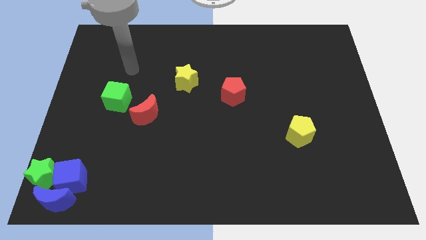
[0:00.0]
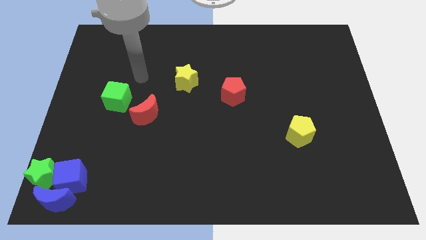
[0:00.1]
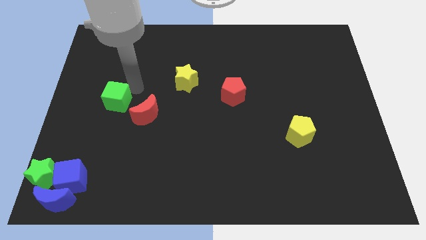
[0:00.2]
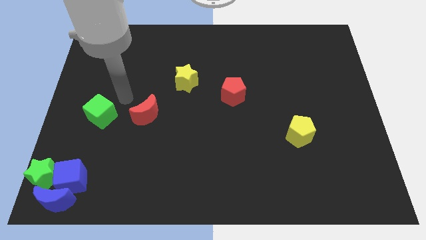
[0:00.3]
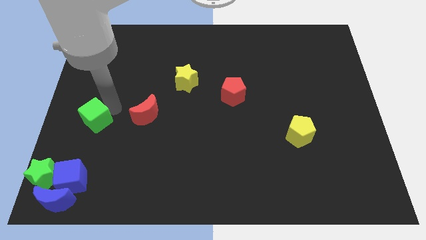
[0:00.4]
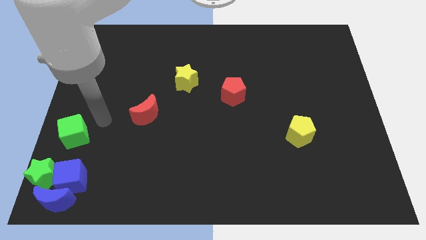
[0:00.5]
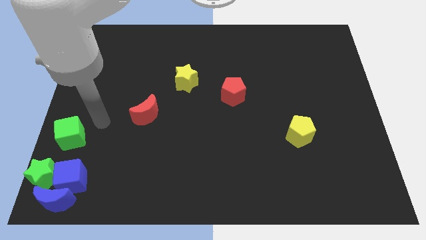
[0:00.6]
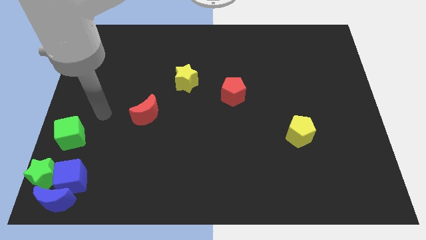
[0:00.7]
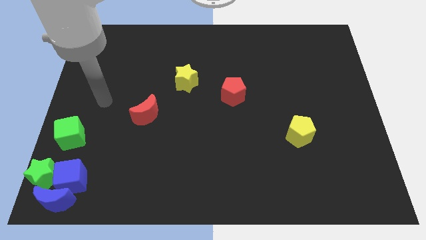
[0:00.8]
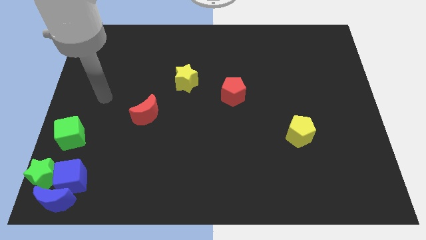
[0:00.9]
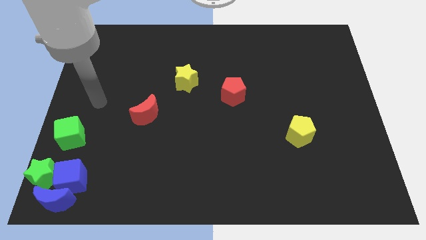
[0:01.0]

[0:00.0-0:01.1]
slide green cube on top of blue cube

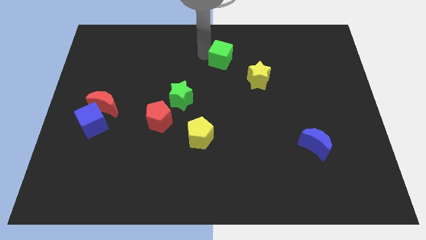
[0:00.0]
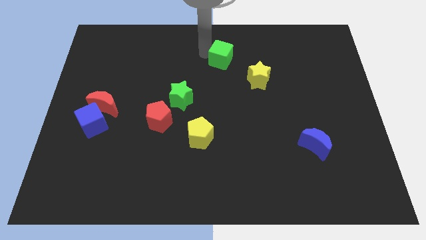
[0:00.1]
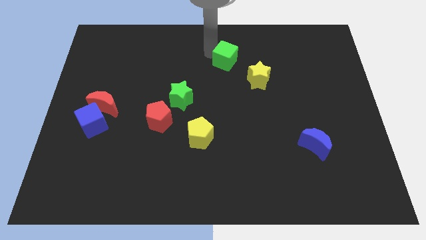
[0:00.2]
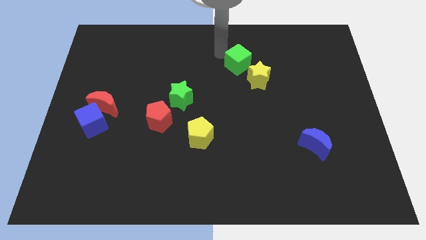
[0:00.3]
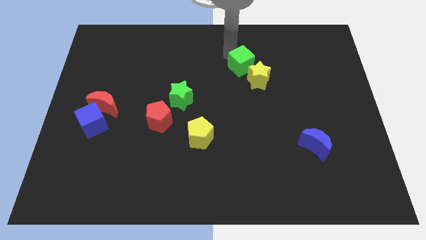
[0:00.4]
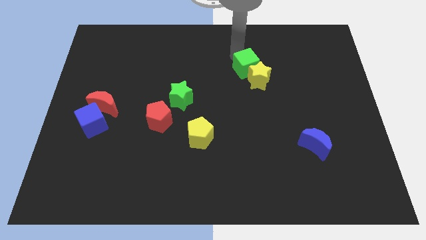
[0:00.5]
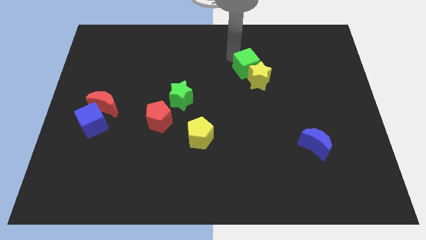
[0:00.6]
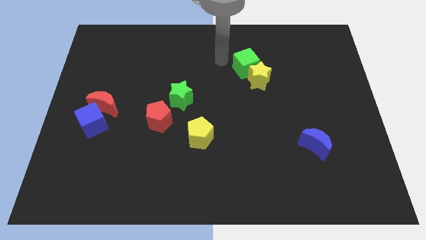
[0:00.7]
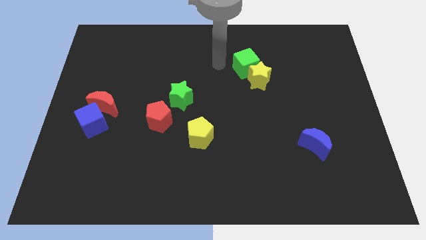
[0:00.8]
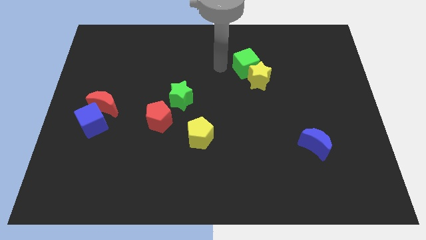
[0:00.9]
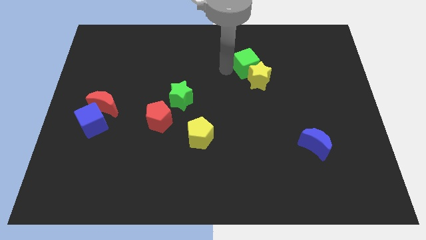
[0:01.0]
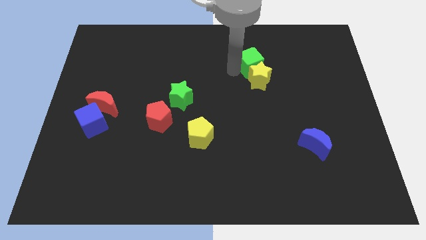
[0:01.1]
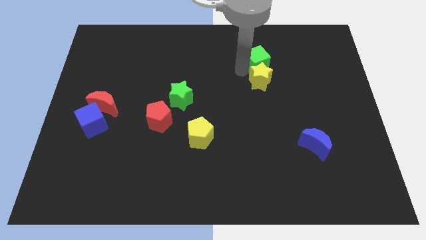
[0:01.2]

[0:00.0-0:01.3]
place the green cube above the yellow star

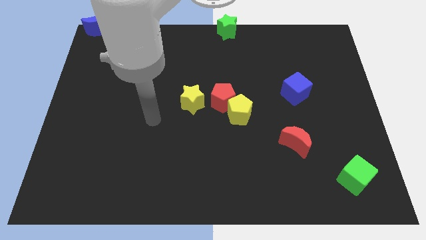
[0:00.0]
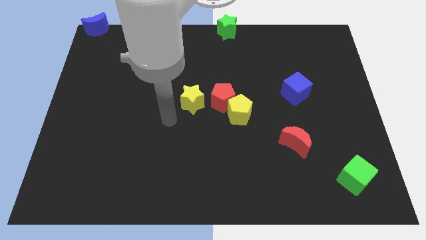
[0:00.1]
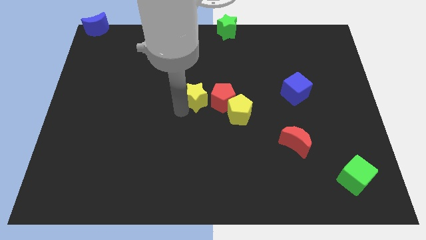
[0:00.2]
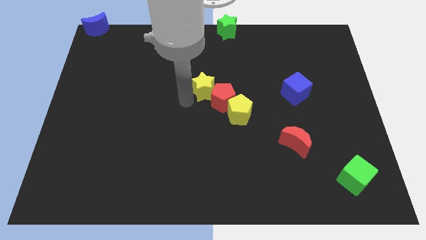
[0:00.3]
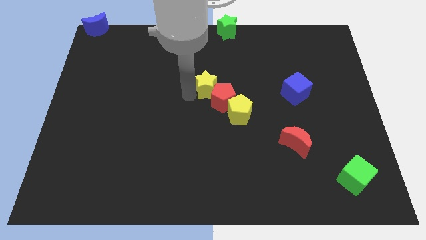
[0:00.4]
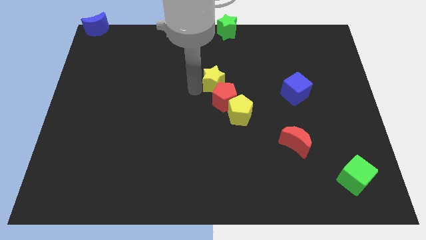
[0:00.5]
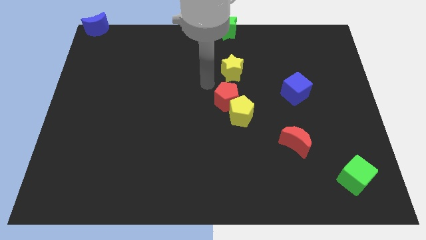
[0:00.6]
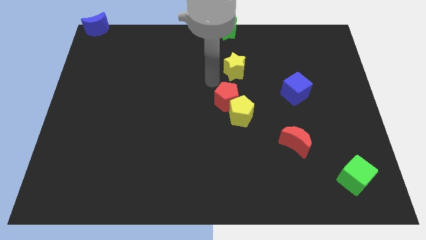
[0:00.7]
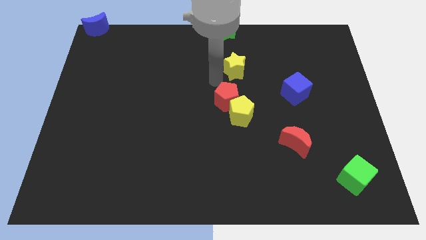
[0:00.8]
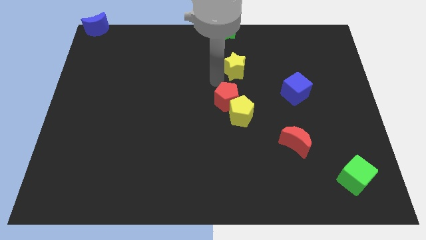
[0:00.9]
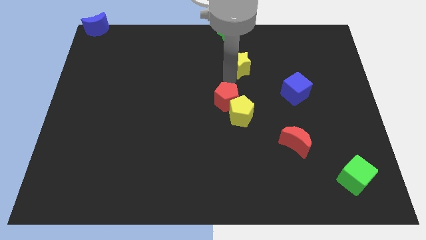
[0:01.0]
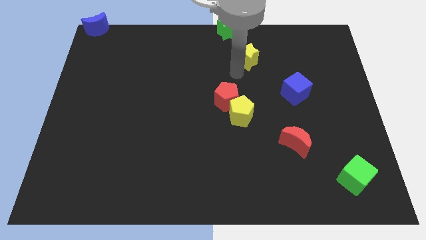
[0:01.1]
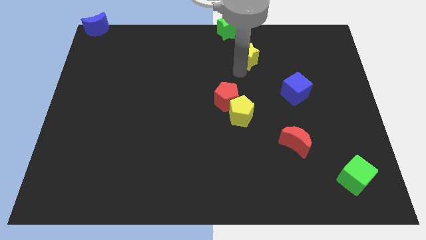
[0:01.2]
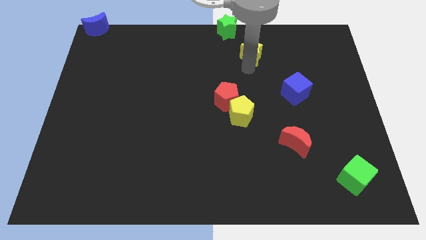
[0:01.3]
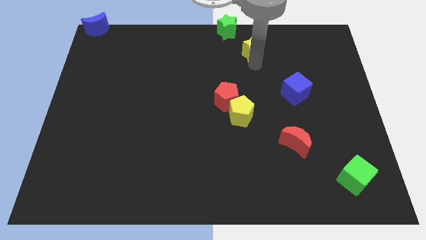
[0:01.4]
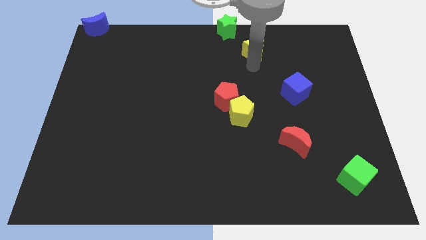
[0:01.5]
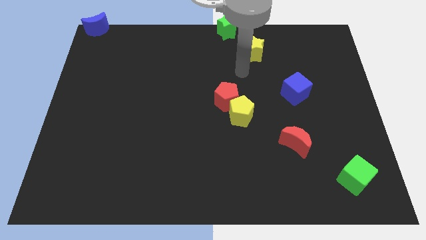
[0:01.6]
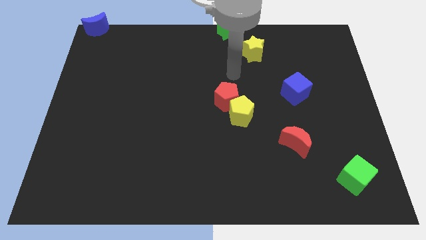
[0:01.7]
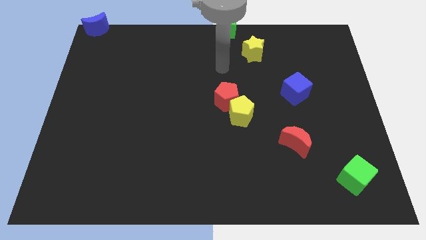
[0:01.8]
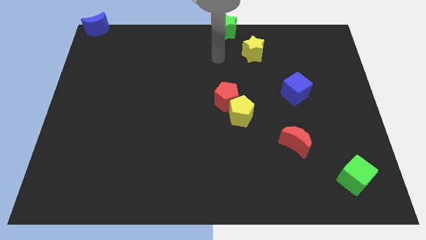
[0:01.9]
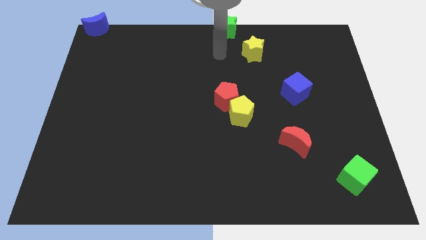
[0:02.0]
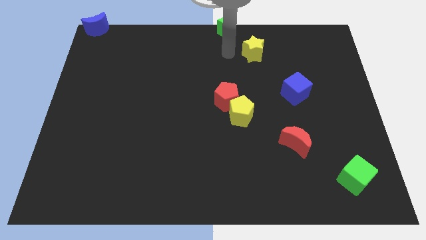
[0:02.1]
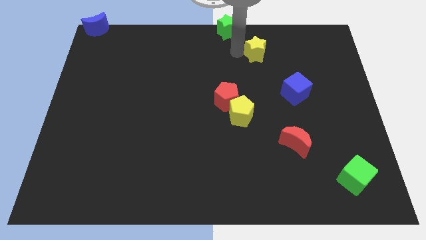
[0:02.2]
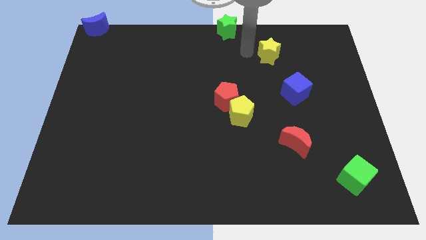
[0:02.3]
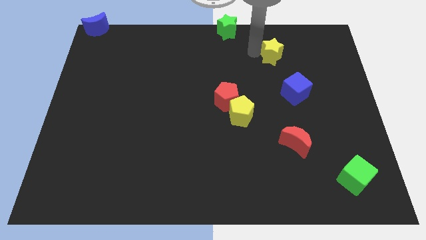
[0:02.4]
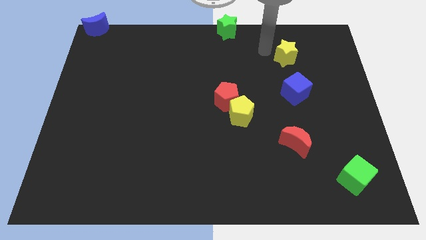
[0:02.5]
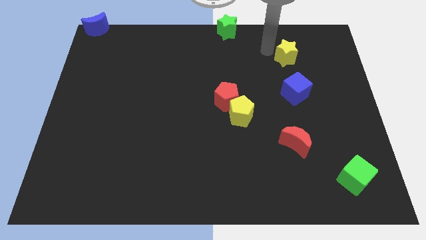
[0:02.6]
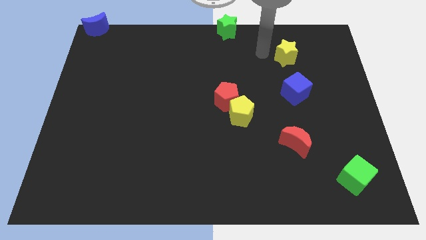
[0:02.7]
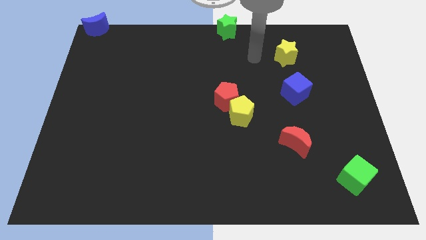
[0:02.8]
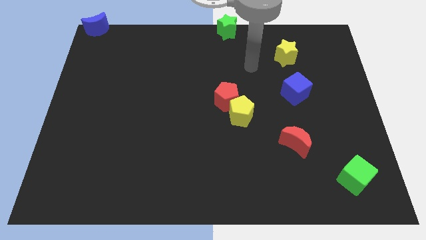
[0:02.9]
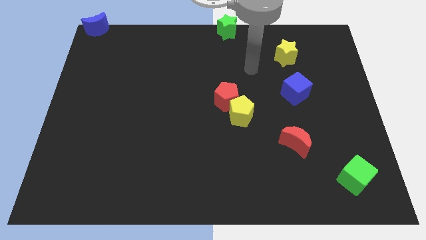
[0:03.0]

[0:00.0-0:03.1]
push the yellow star vertically above the blue cube

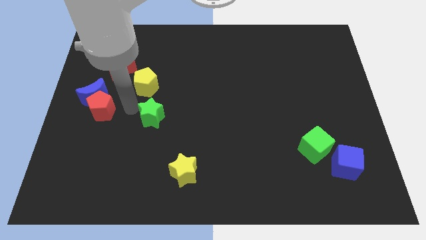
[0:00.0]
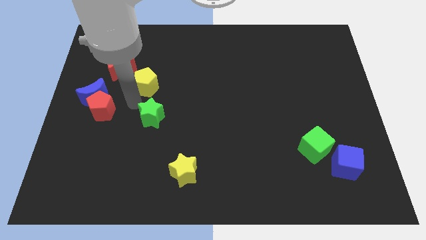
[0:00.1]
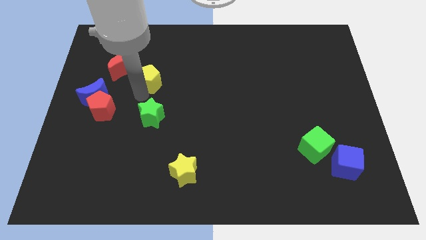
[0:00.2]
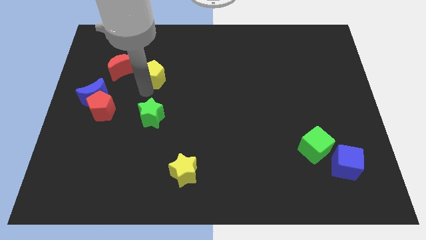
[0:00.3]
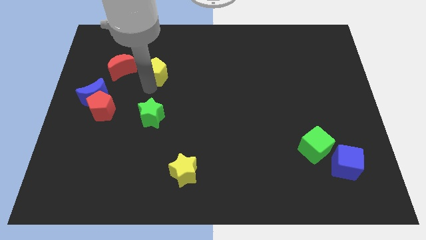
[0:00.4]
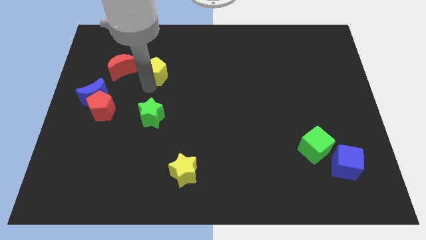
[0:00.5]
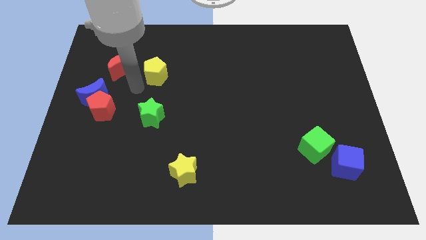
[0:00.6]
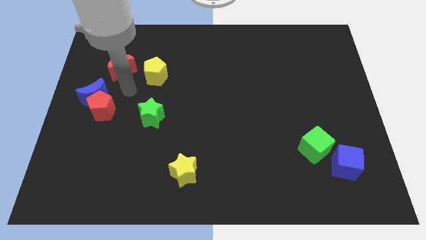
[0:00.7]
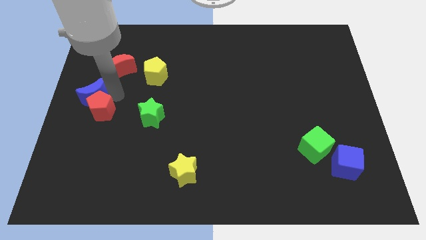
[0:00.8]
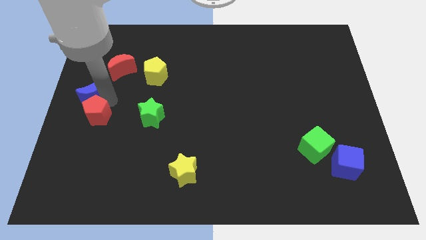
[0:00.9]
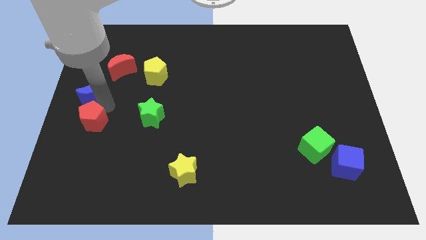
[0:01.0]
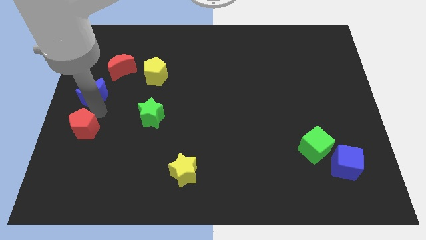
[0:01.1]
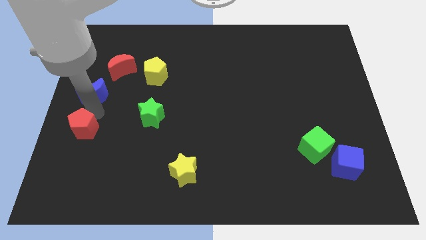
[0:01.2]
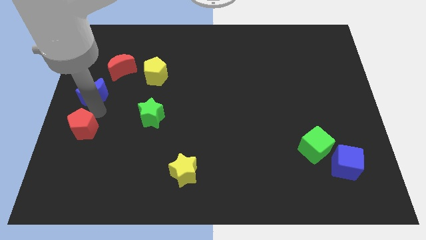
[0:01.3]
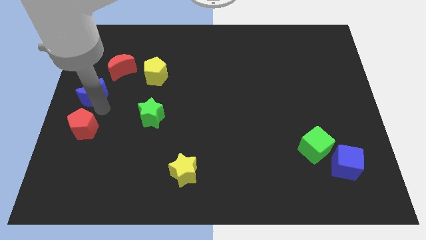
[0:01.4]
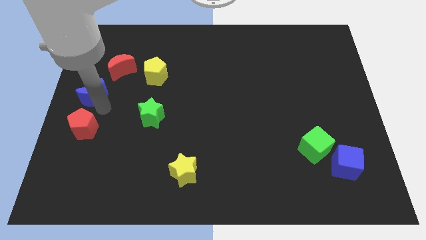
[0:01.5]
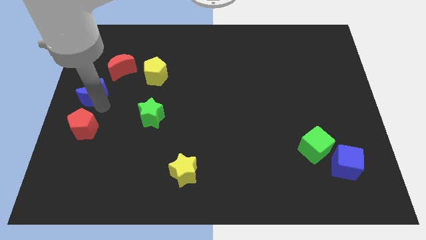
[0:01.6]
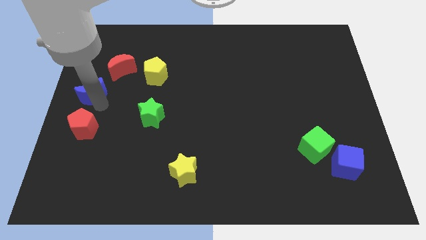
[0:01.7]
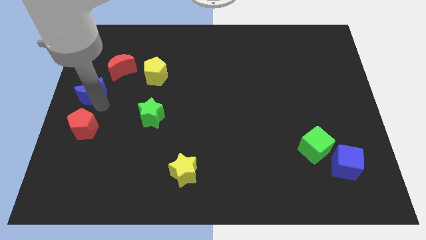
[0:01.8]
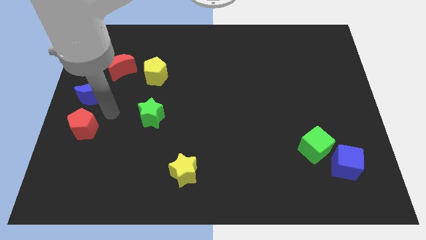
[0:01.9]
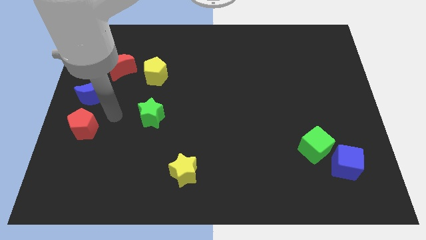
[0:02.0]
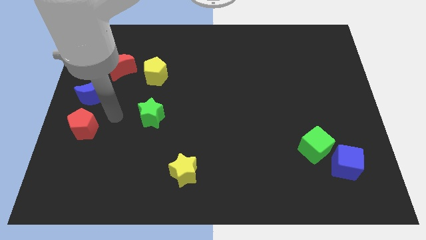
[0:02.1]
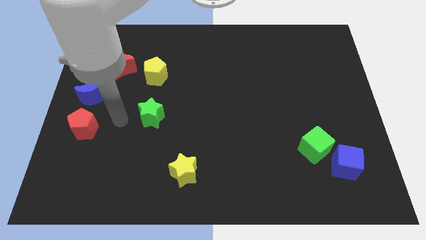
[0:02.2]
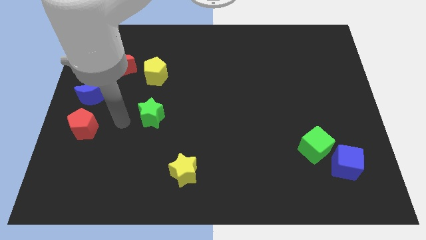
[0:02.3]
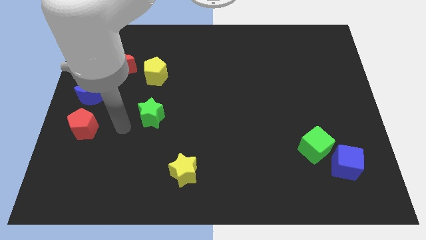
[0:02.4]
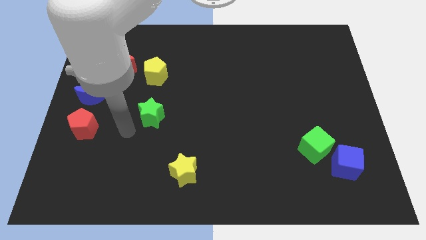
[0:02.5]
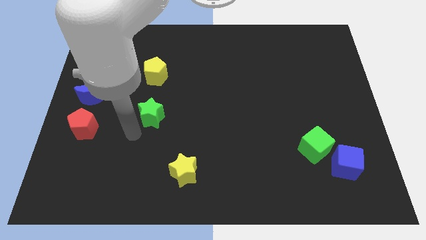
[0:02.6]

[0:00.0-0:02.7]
separate the yellow pentagon and the red pentagon

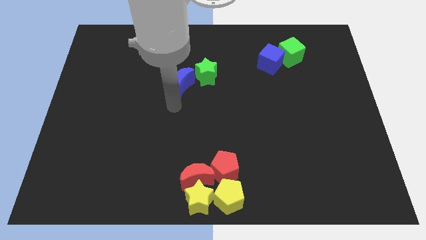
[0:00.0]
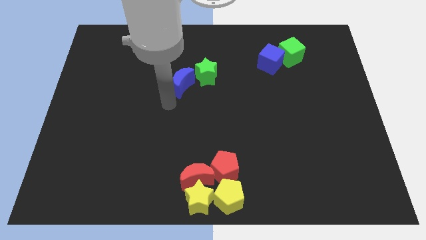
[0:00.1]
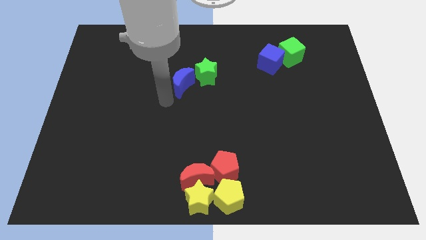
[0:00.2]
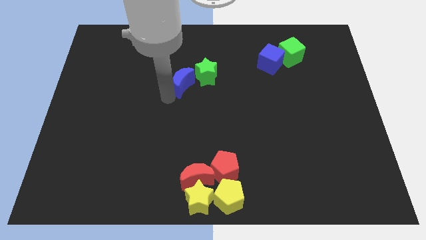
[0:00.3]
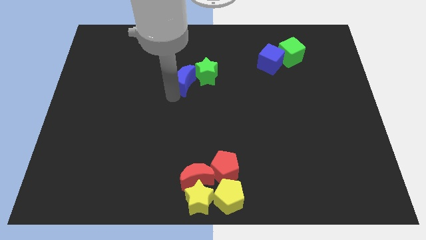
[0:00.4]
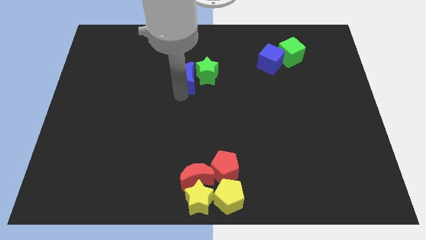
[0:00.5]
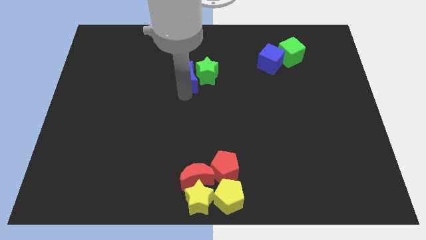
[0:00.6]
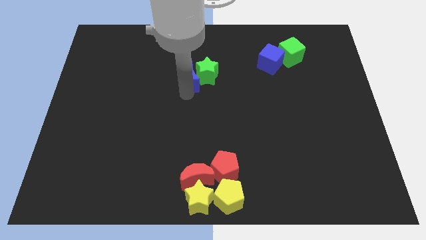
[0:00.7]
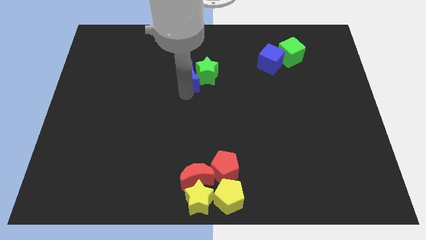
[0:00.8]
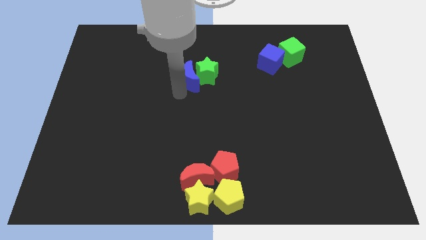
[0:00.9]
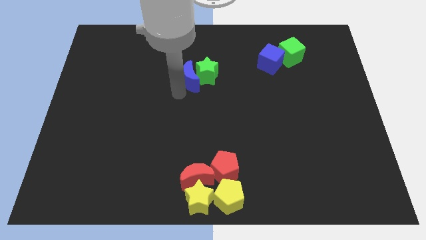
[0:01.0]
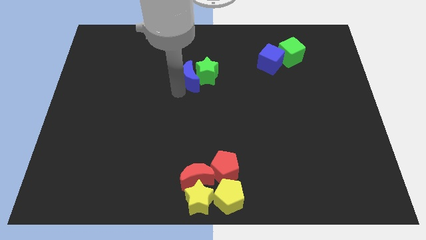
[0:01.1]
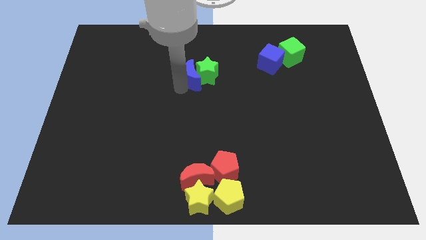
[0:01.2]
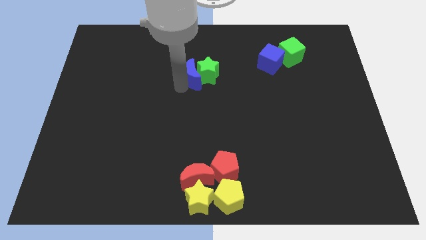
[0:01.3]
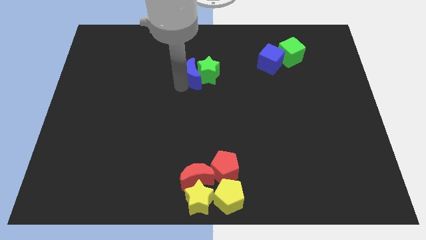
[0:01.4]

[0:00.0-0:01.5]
move the blue crescent to the left side of the green star
